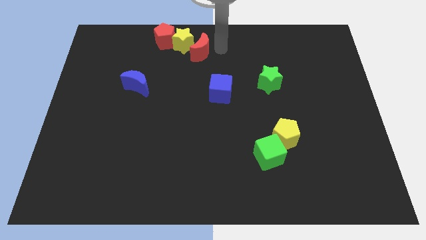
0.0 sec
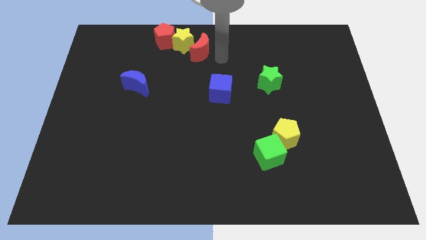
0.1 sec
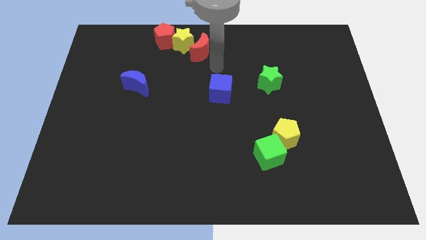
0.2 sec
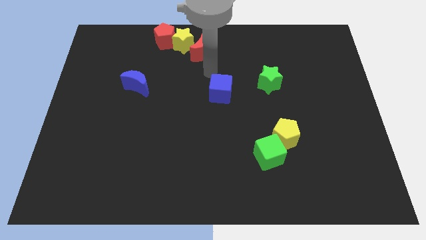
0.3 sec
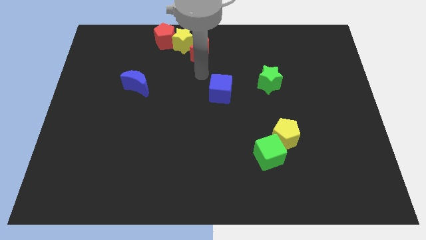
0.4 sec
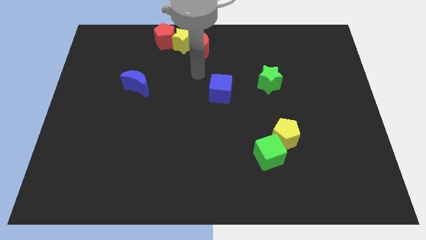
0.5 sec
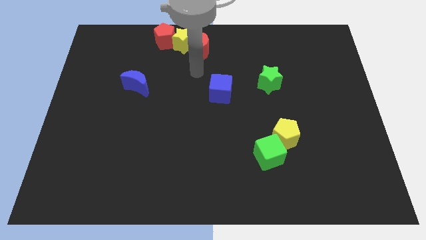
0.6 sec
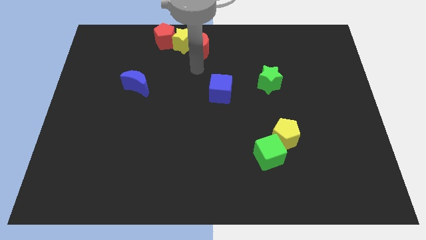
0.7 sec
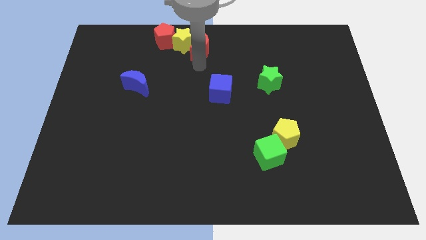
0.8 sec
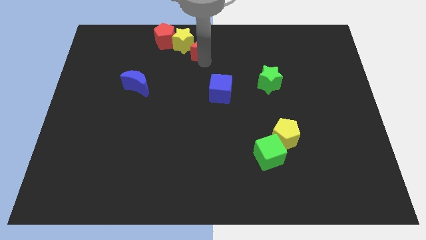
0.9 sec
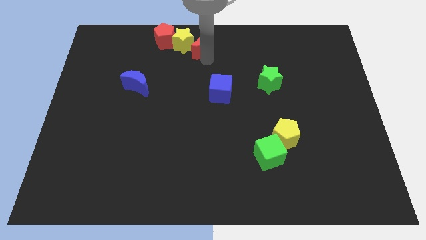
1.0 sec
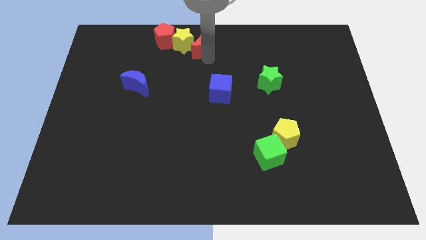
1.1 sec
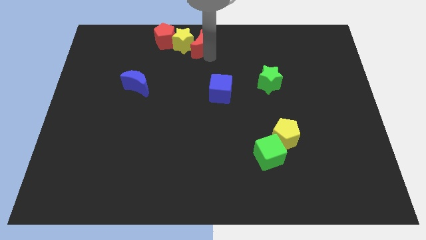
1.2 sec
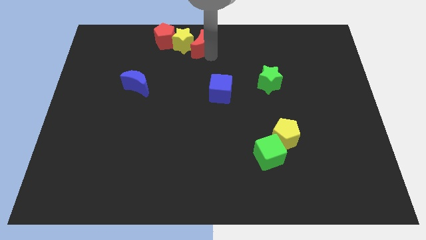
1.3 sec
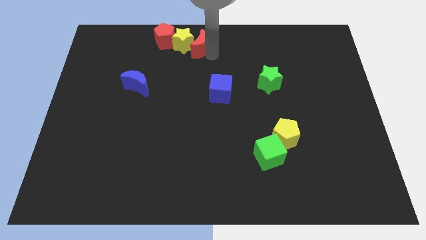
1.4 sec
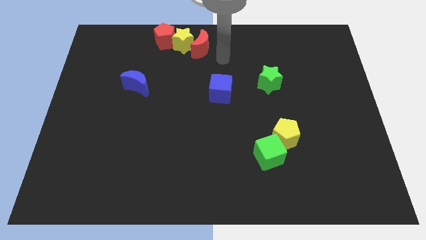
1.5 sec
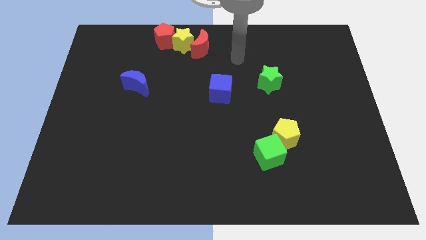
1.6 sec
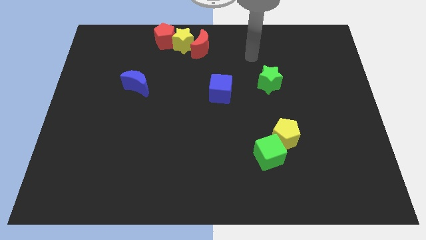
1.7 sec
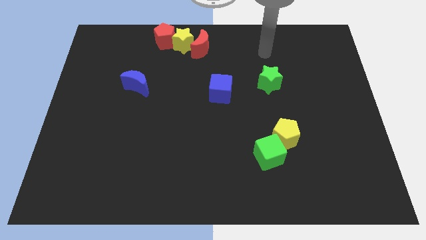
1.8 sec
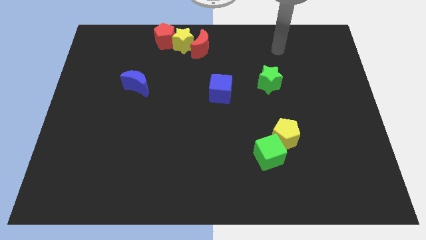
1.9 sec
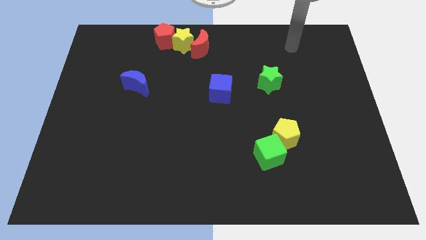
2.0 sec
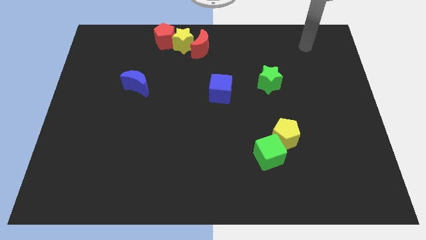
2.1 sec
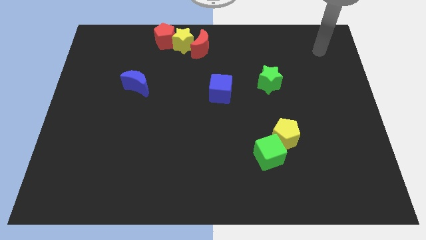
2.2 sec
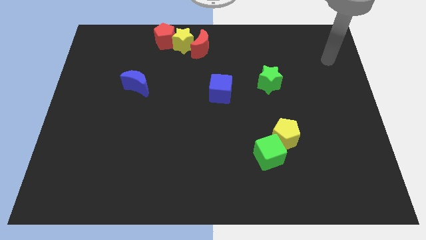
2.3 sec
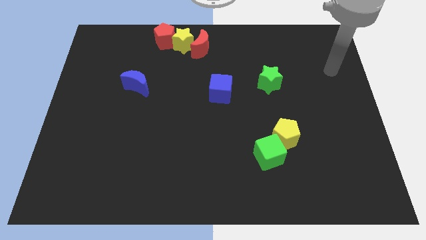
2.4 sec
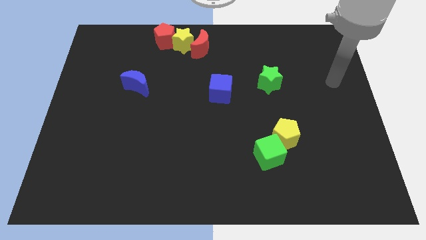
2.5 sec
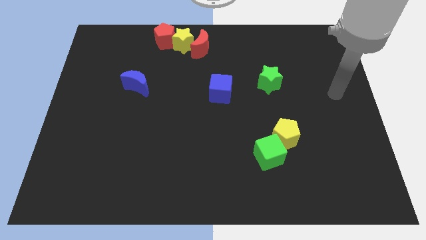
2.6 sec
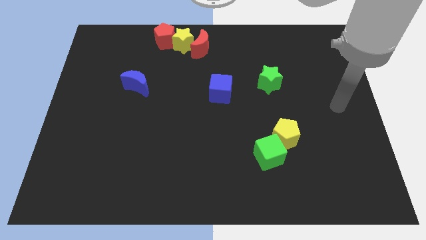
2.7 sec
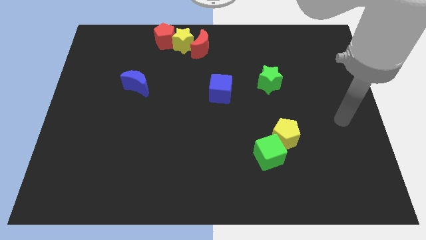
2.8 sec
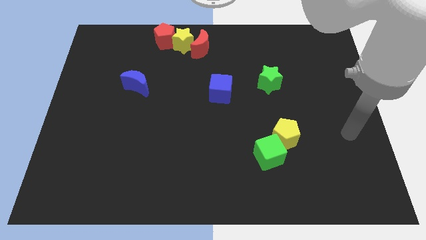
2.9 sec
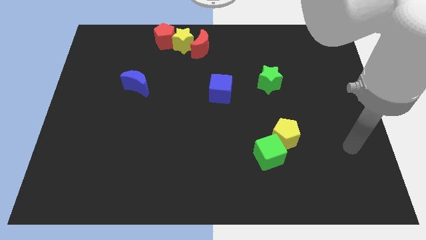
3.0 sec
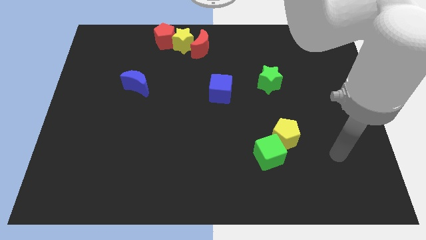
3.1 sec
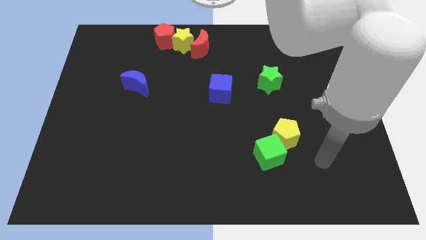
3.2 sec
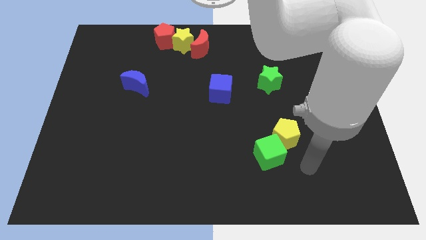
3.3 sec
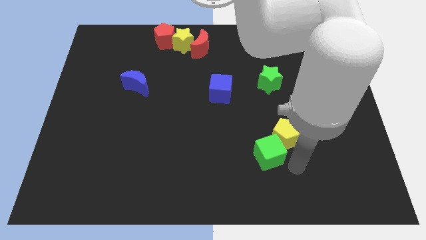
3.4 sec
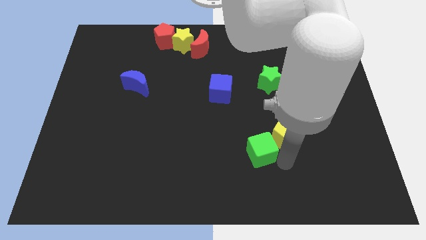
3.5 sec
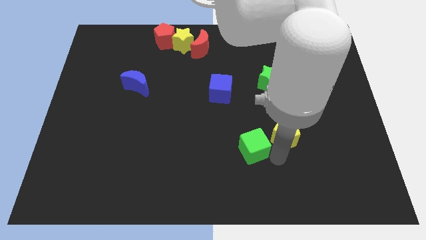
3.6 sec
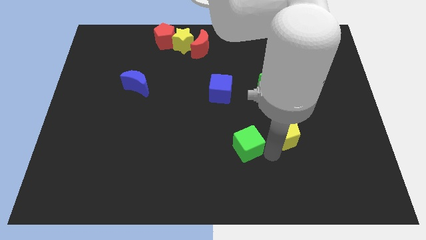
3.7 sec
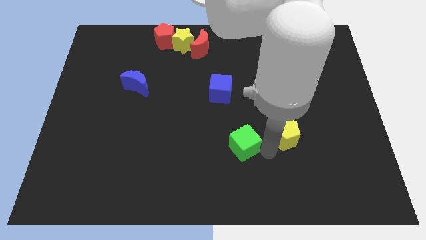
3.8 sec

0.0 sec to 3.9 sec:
move your arm towards the green cube

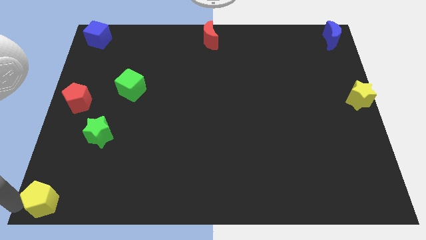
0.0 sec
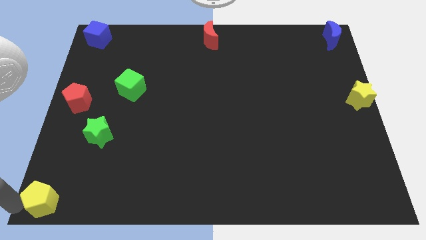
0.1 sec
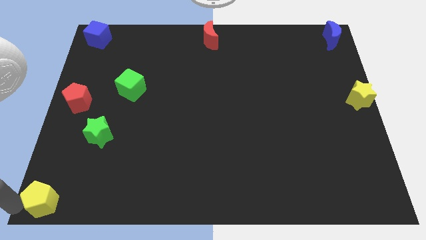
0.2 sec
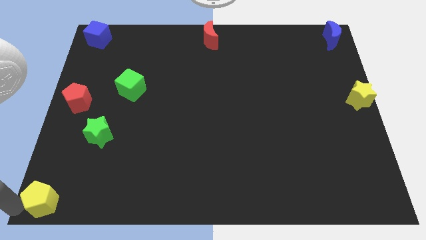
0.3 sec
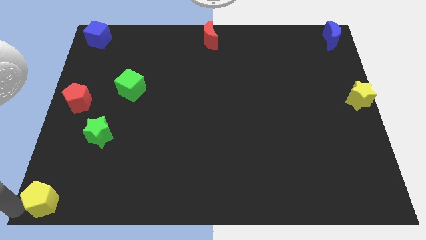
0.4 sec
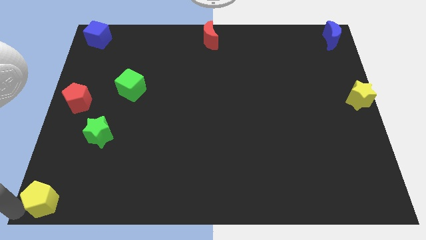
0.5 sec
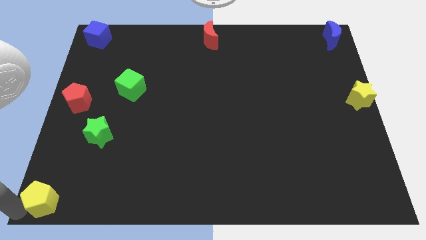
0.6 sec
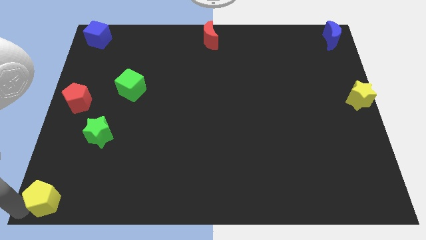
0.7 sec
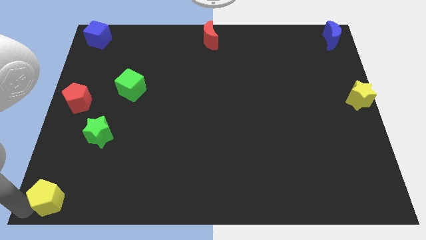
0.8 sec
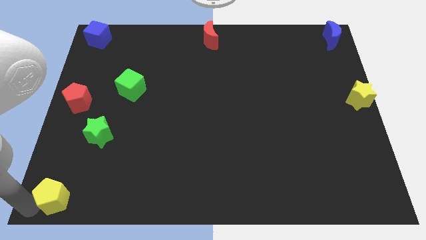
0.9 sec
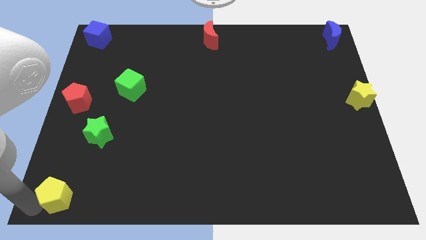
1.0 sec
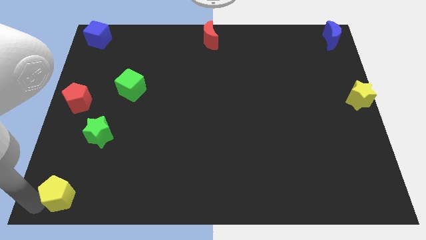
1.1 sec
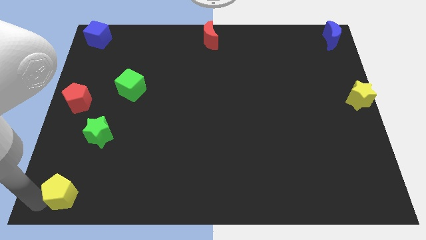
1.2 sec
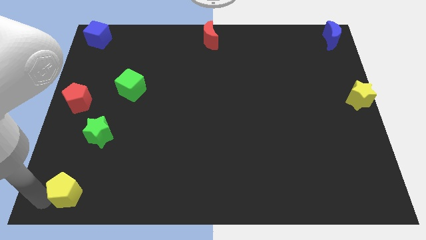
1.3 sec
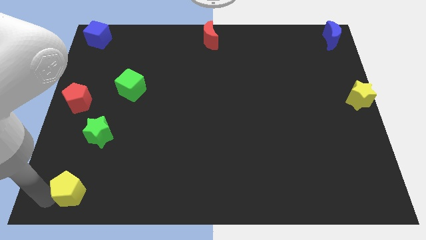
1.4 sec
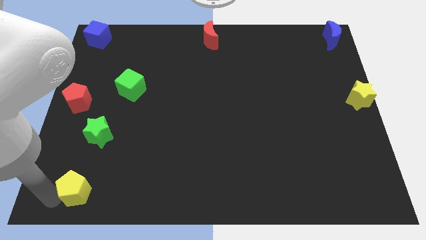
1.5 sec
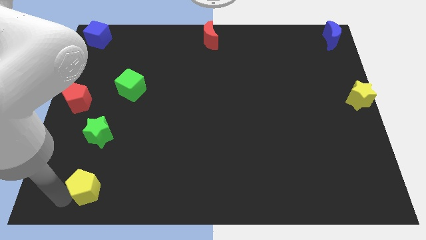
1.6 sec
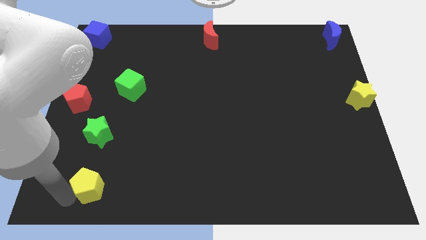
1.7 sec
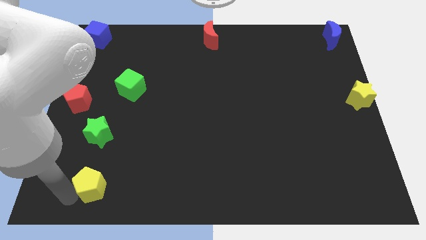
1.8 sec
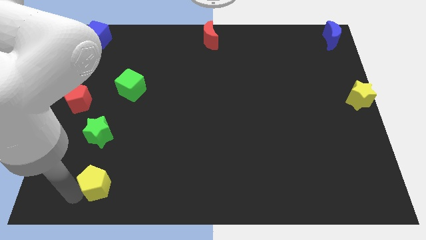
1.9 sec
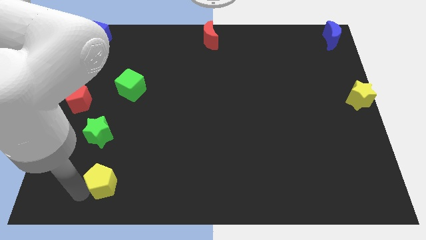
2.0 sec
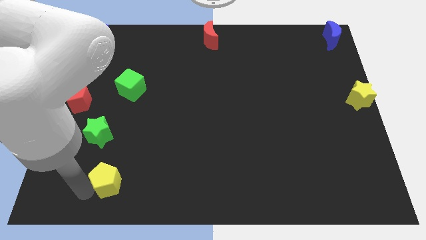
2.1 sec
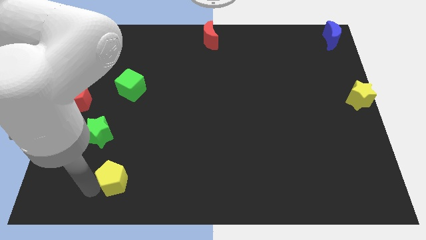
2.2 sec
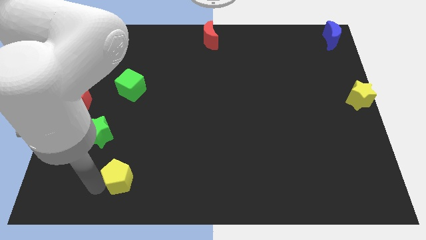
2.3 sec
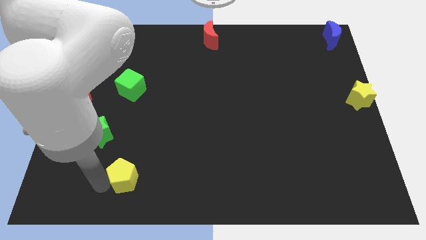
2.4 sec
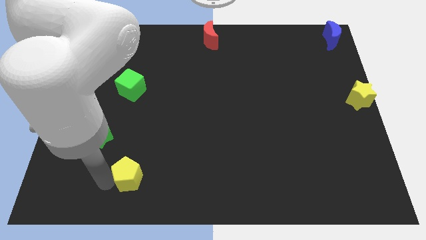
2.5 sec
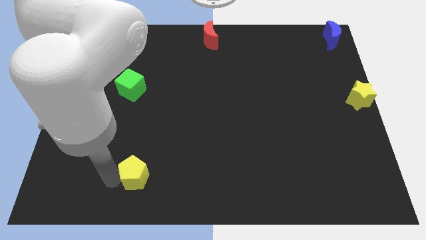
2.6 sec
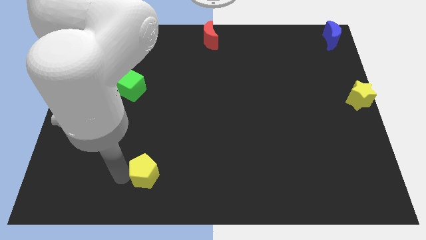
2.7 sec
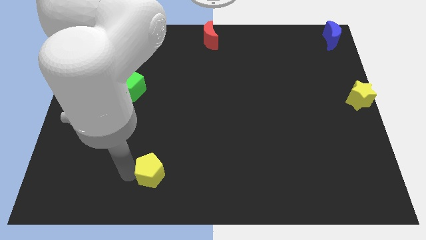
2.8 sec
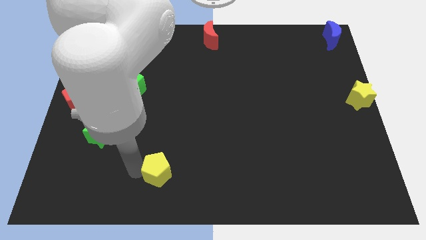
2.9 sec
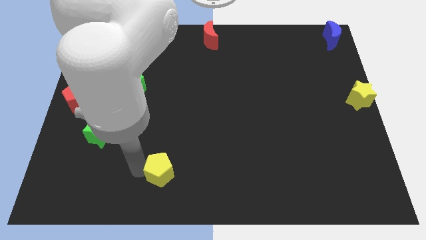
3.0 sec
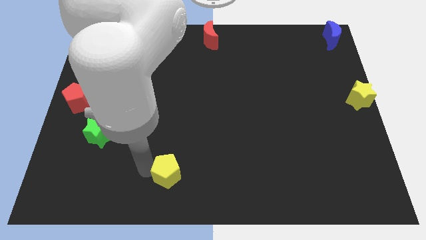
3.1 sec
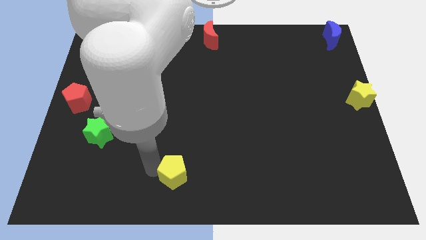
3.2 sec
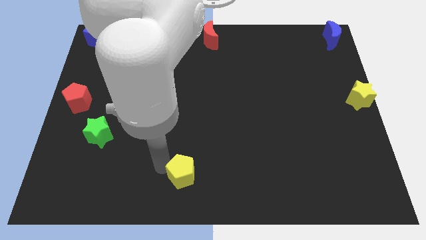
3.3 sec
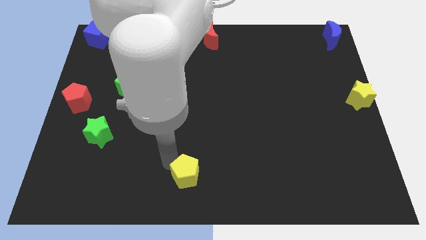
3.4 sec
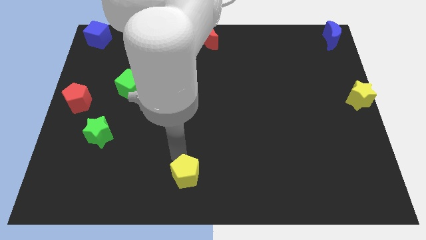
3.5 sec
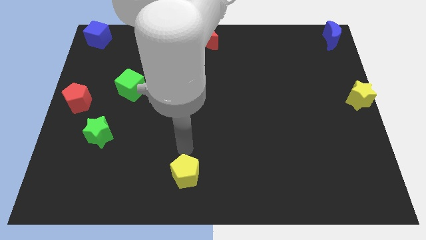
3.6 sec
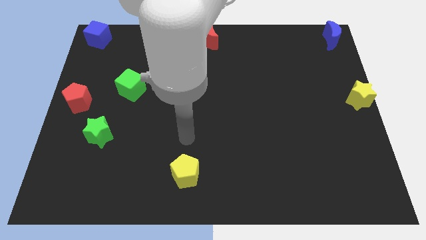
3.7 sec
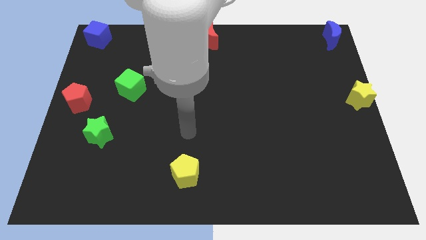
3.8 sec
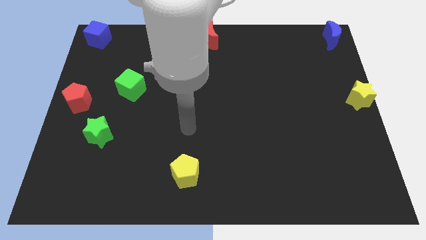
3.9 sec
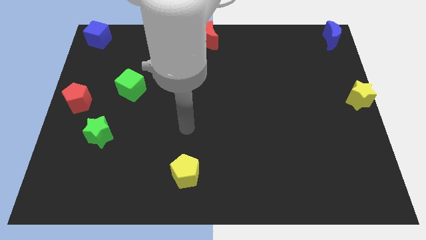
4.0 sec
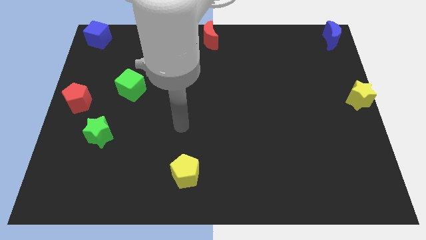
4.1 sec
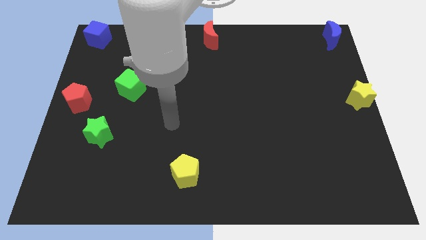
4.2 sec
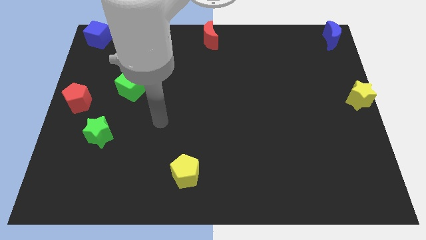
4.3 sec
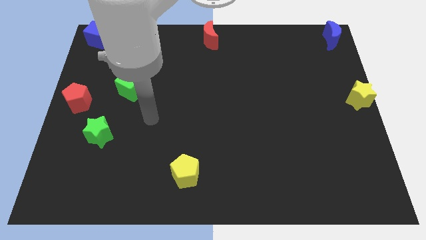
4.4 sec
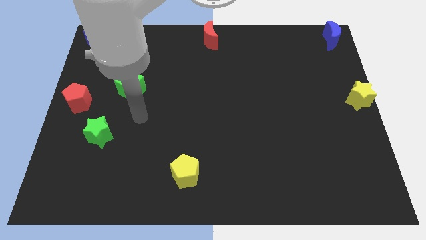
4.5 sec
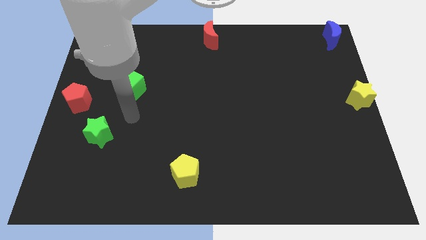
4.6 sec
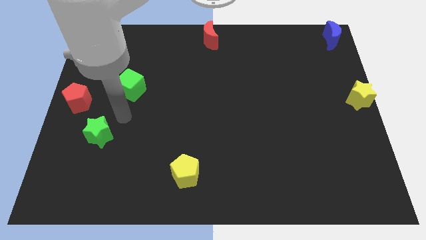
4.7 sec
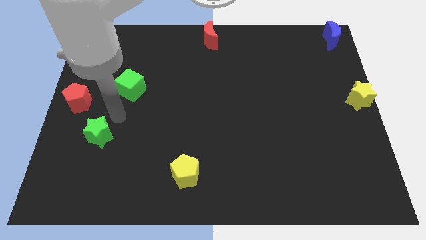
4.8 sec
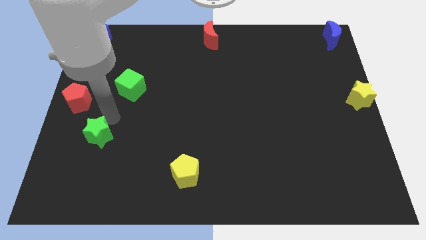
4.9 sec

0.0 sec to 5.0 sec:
push the yellow pentagon towards the center
